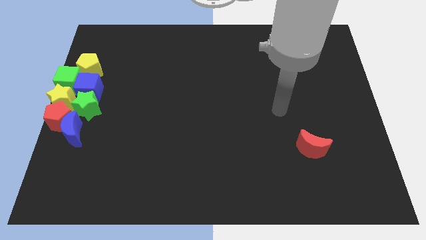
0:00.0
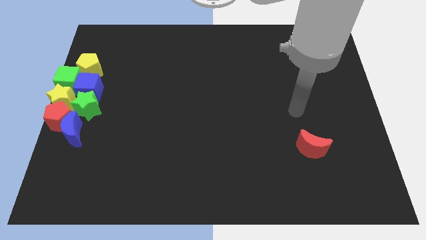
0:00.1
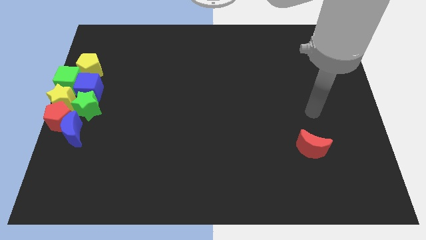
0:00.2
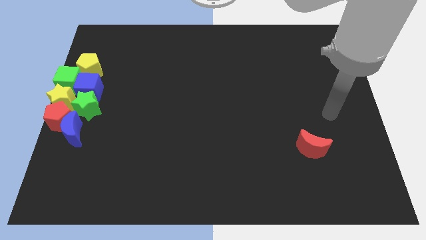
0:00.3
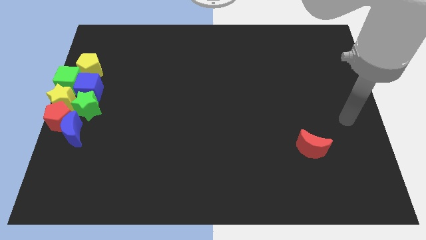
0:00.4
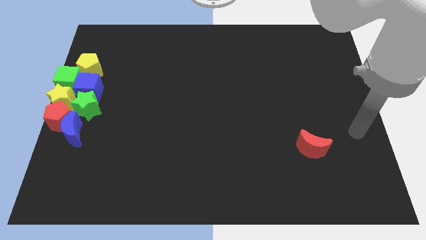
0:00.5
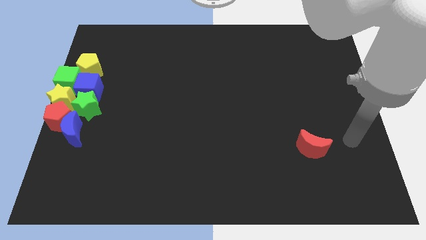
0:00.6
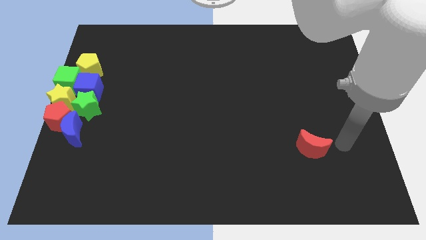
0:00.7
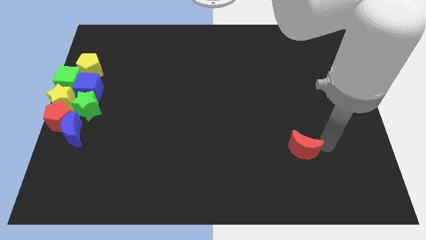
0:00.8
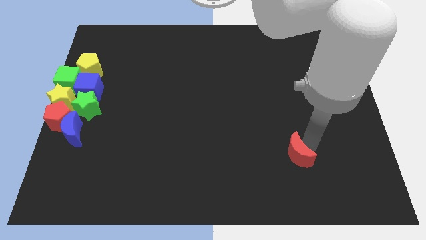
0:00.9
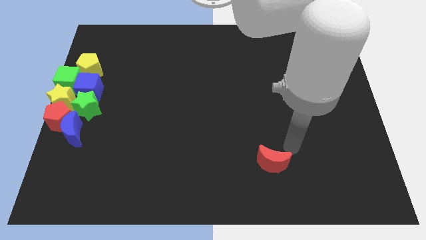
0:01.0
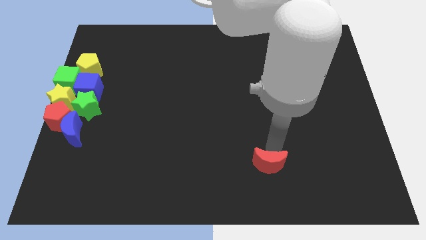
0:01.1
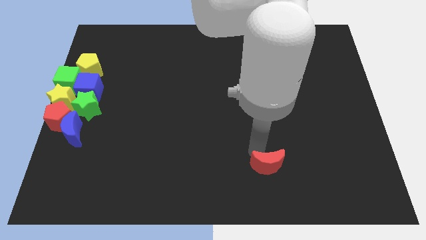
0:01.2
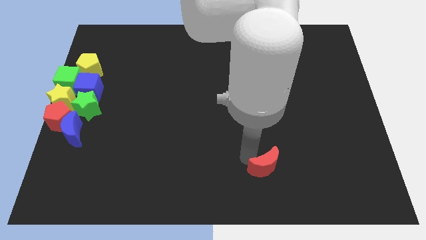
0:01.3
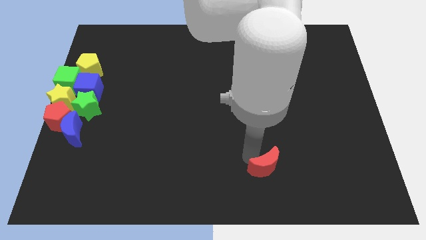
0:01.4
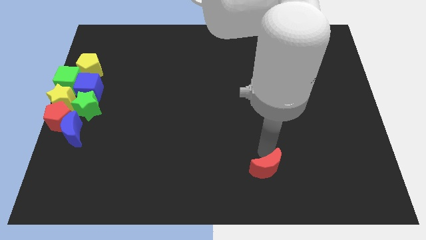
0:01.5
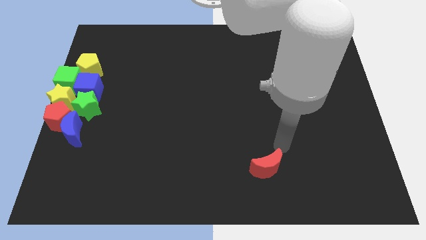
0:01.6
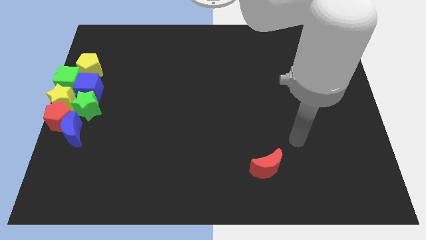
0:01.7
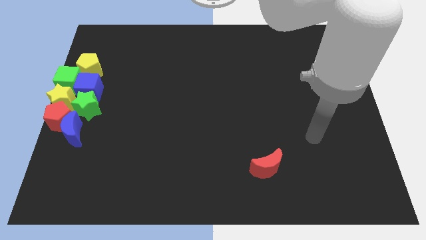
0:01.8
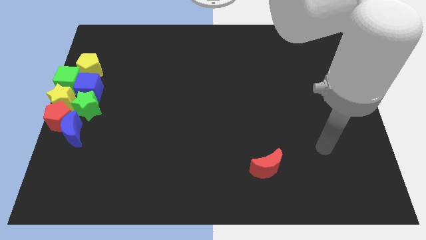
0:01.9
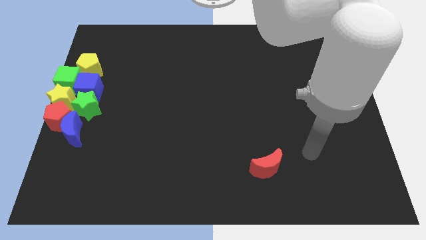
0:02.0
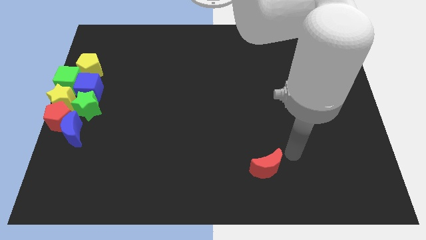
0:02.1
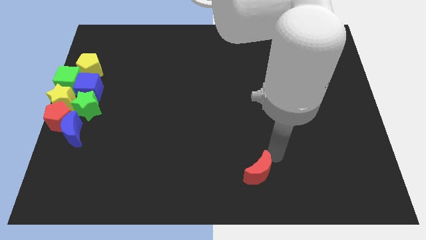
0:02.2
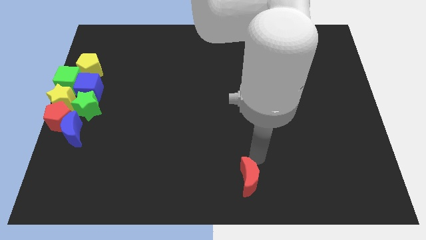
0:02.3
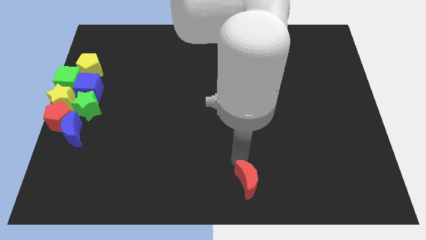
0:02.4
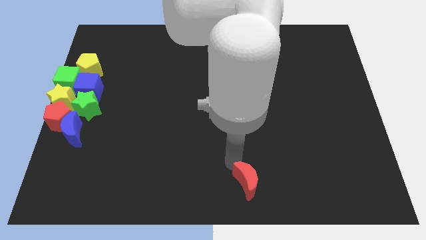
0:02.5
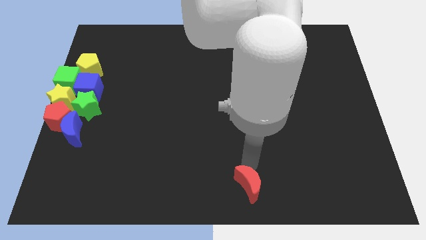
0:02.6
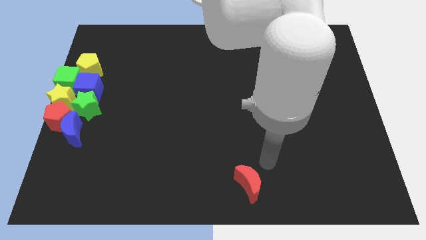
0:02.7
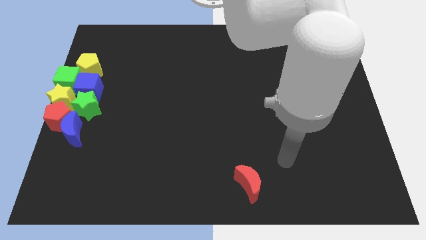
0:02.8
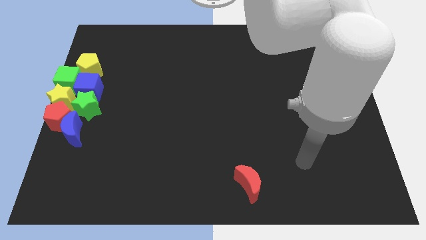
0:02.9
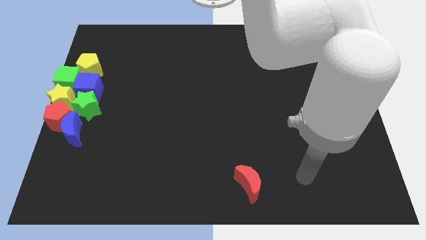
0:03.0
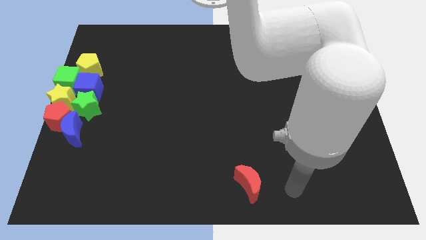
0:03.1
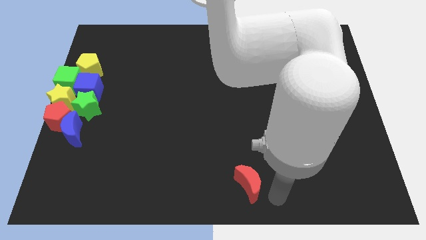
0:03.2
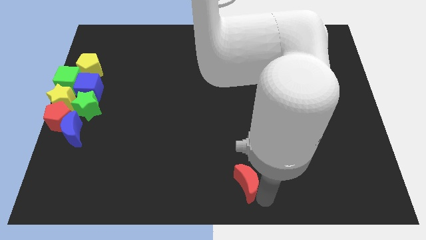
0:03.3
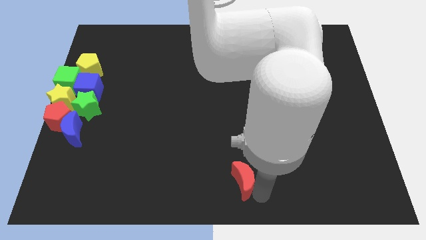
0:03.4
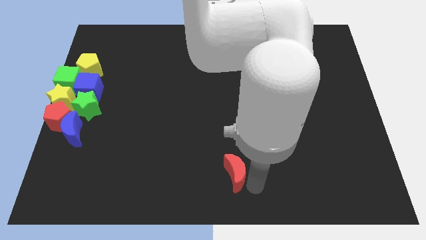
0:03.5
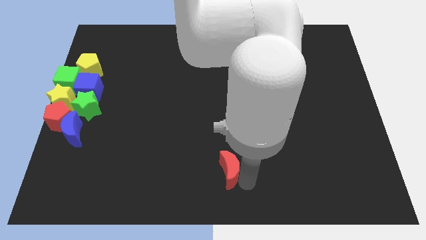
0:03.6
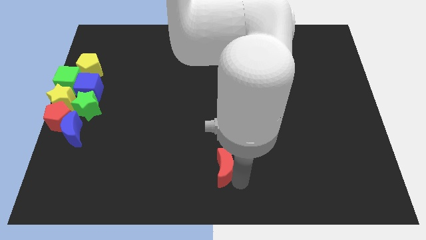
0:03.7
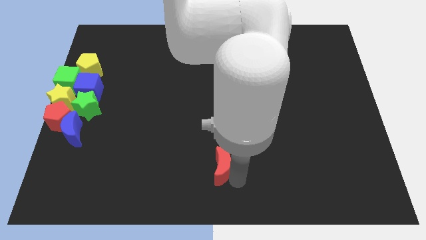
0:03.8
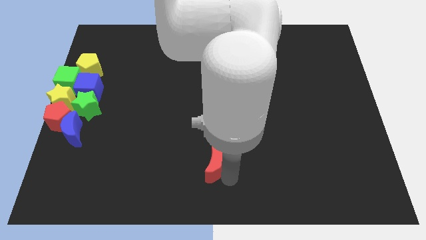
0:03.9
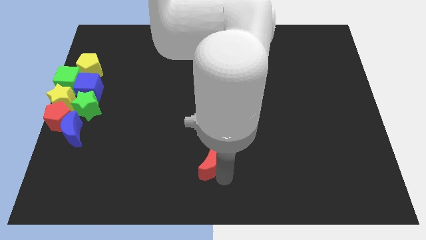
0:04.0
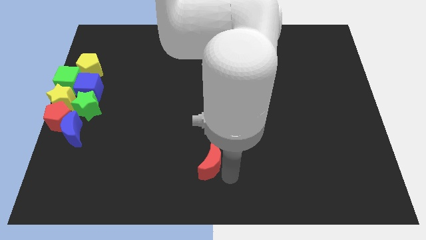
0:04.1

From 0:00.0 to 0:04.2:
push the red crescent towards the bottom center of the board

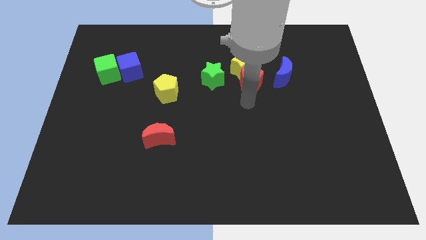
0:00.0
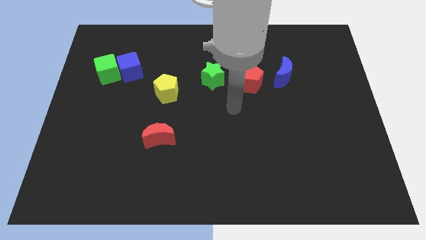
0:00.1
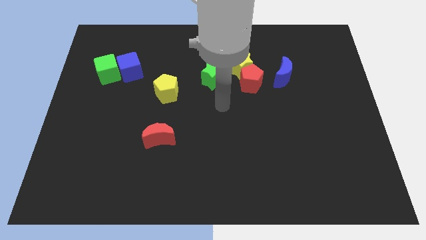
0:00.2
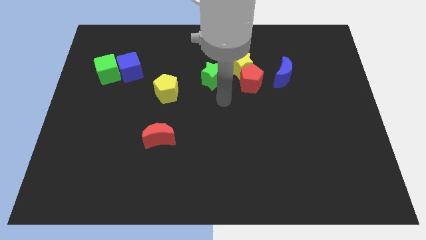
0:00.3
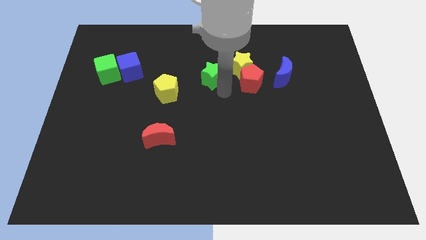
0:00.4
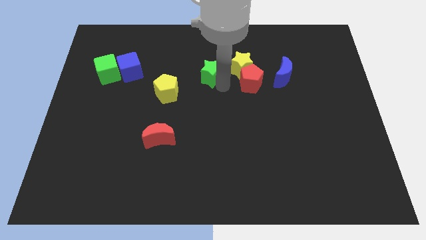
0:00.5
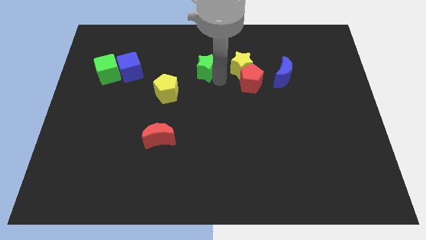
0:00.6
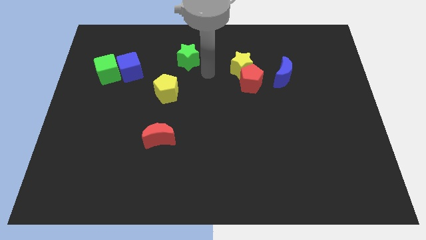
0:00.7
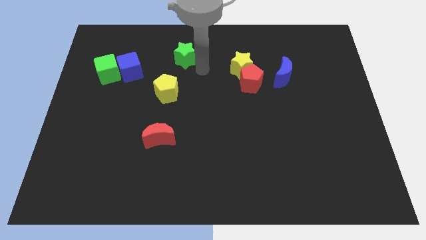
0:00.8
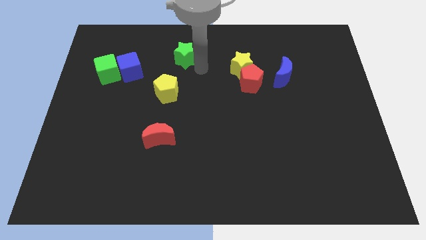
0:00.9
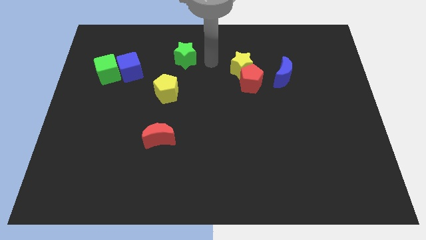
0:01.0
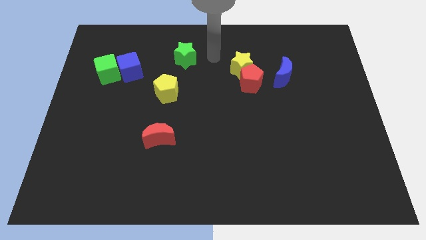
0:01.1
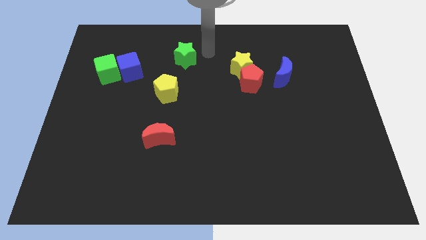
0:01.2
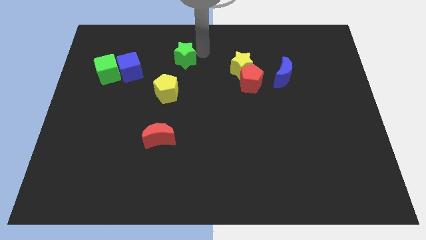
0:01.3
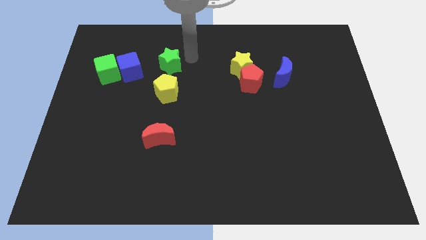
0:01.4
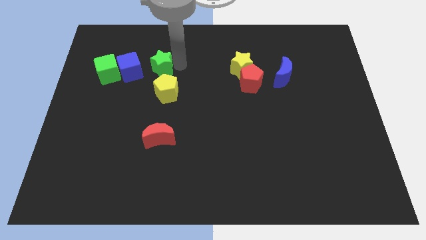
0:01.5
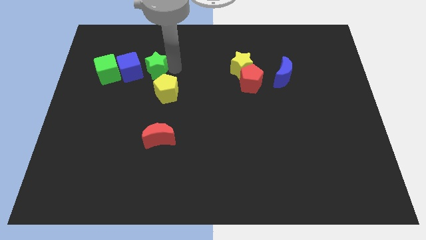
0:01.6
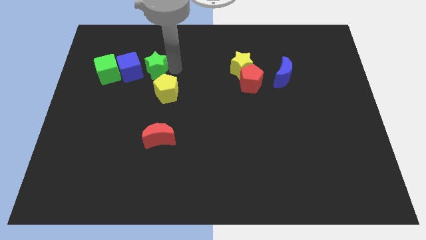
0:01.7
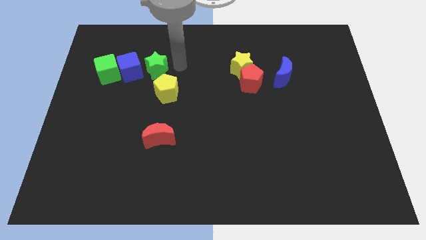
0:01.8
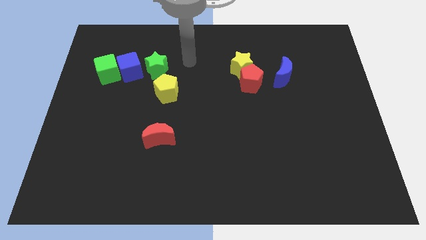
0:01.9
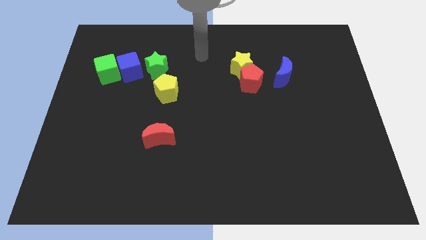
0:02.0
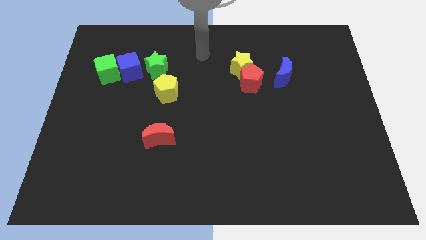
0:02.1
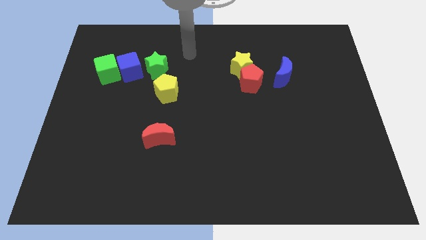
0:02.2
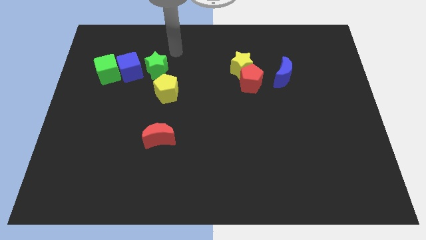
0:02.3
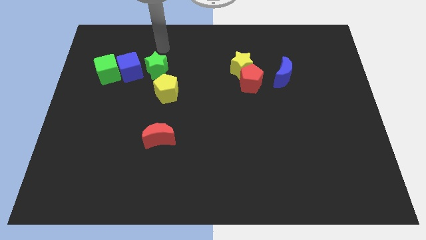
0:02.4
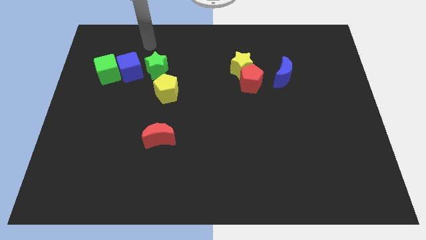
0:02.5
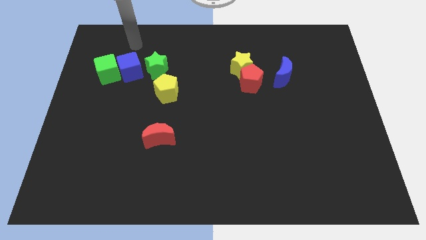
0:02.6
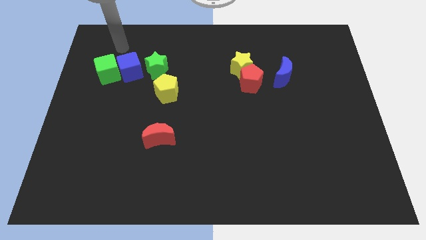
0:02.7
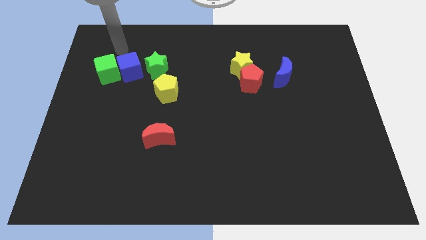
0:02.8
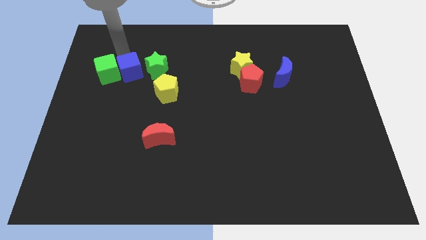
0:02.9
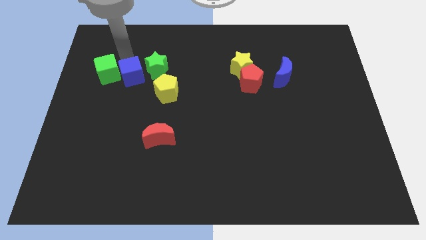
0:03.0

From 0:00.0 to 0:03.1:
move the green star close to the yellow pentagon

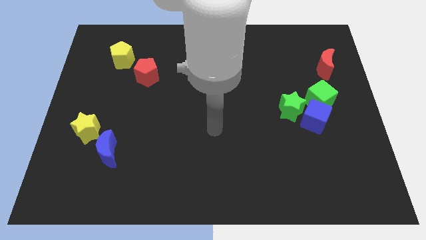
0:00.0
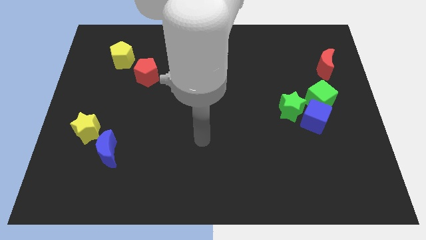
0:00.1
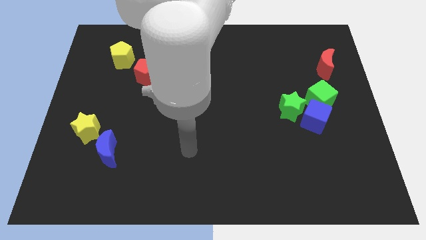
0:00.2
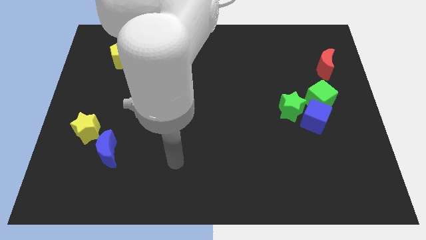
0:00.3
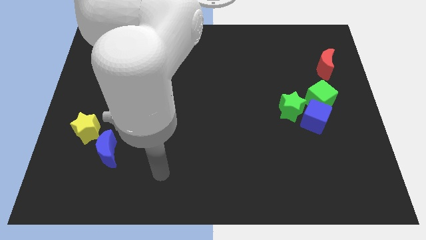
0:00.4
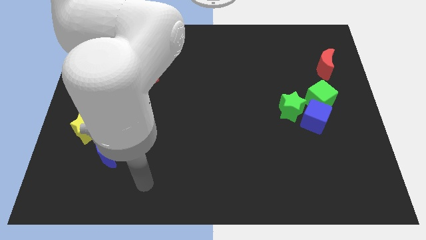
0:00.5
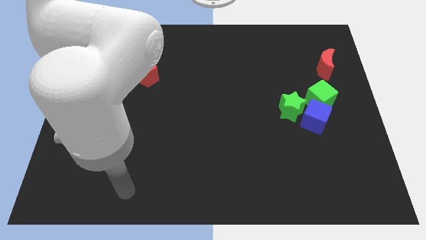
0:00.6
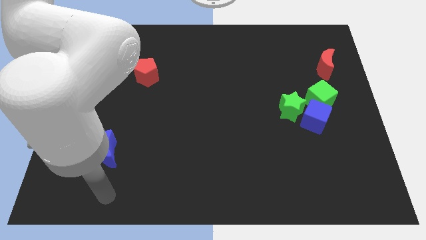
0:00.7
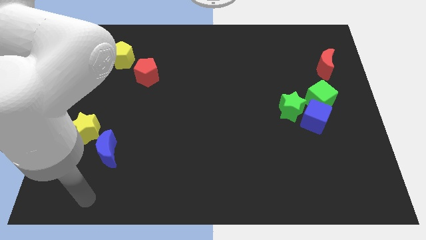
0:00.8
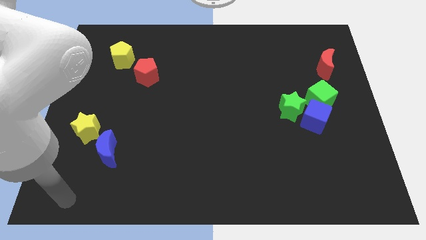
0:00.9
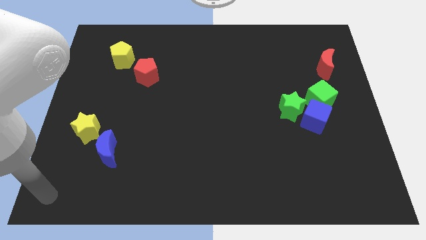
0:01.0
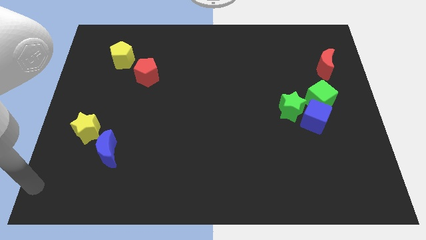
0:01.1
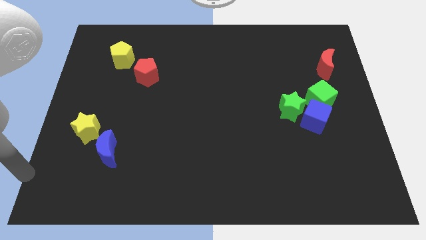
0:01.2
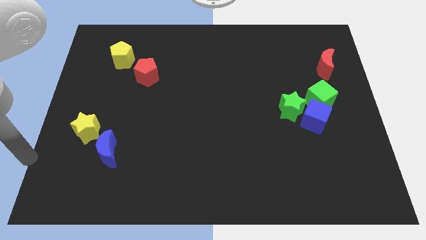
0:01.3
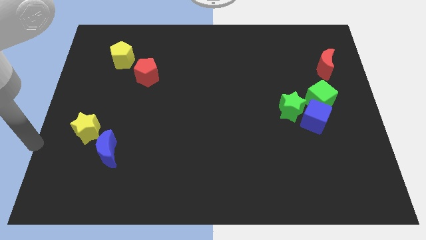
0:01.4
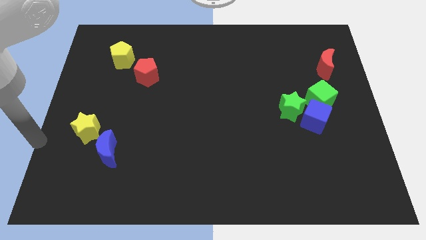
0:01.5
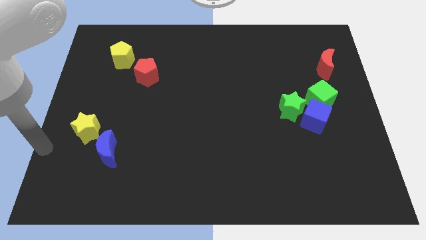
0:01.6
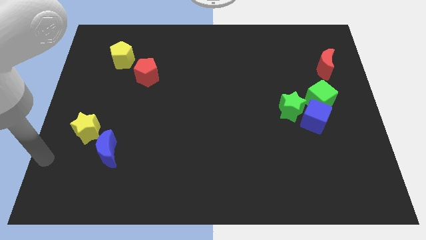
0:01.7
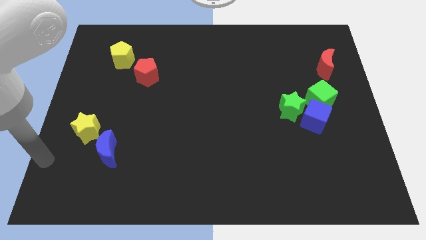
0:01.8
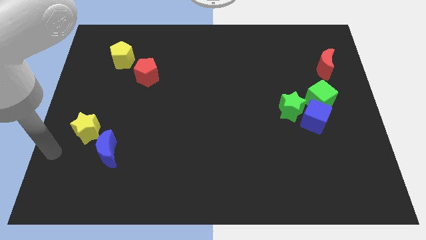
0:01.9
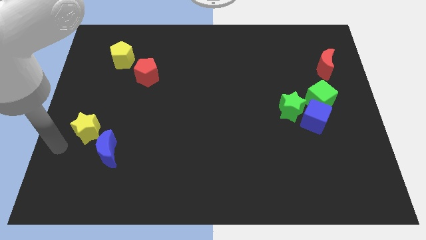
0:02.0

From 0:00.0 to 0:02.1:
move the arm into the yellow star
